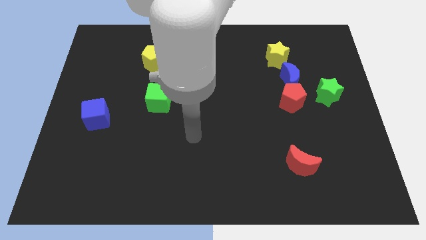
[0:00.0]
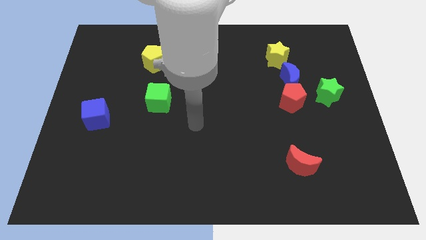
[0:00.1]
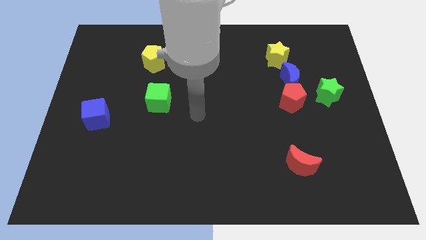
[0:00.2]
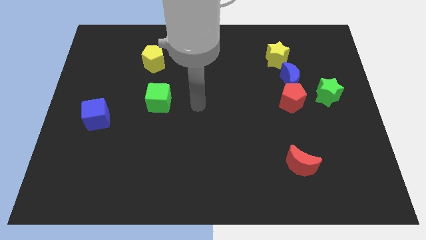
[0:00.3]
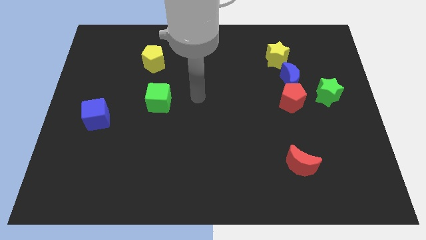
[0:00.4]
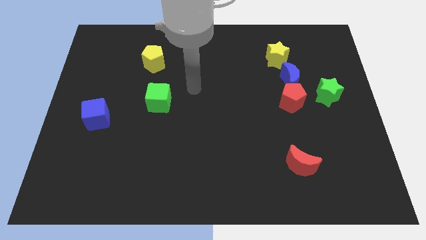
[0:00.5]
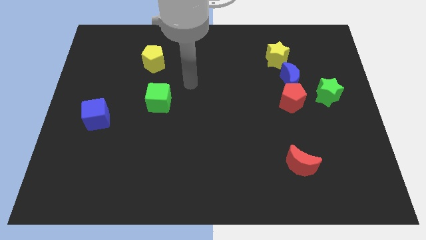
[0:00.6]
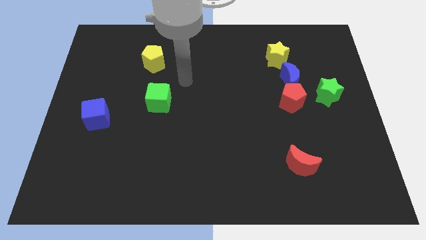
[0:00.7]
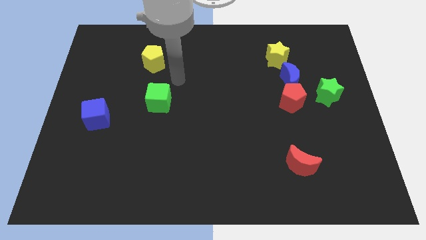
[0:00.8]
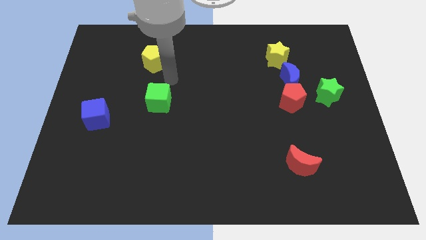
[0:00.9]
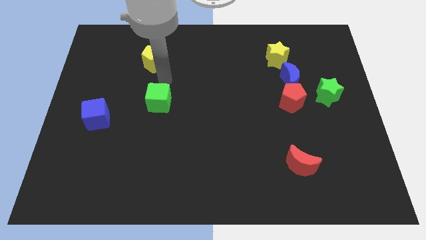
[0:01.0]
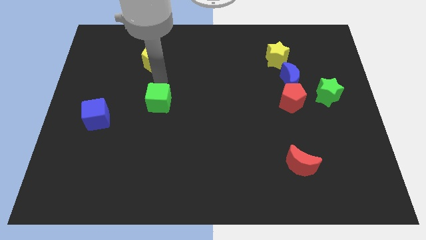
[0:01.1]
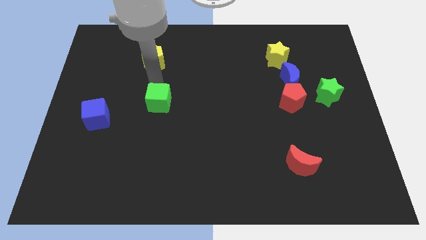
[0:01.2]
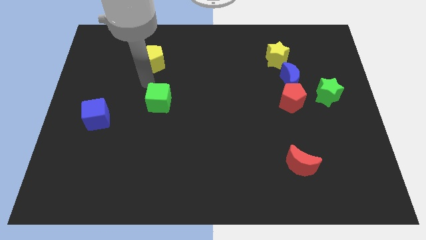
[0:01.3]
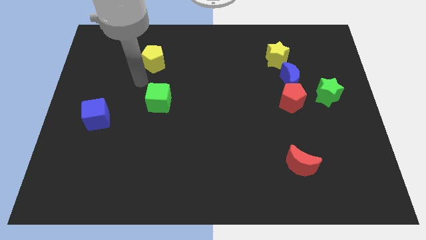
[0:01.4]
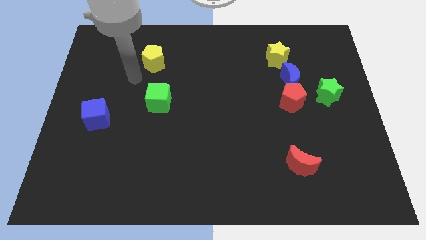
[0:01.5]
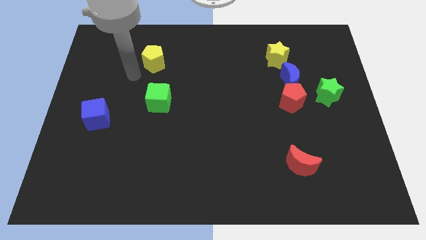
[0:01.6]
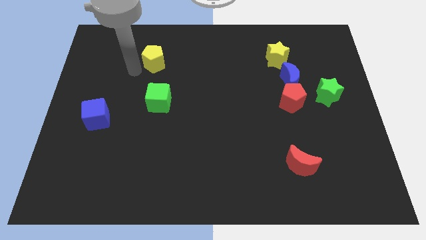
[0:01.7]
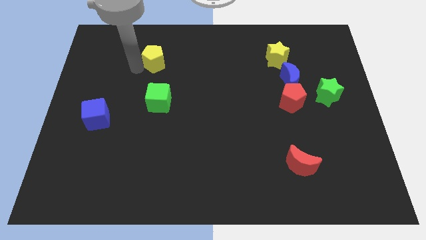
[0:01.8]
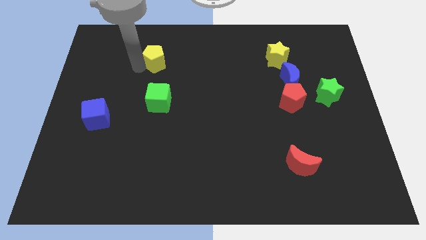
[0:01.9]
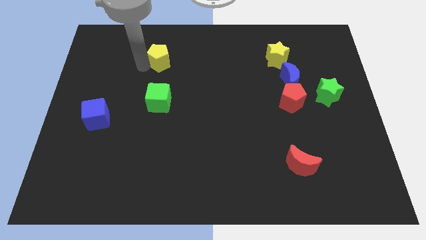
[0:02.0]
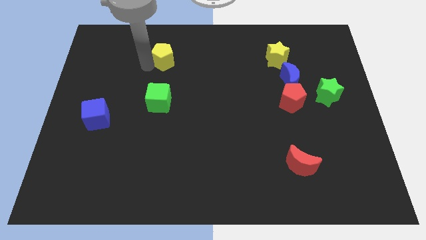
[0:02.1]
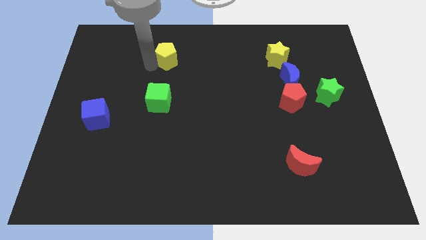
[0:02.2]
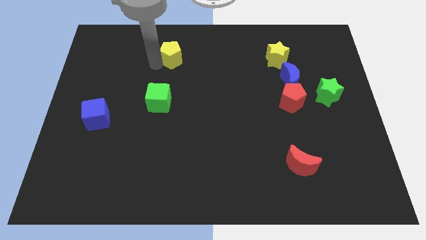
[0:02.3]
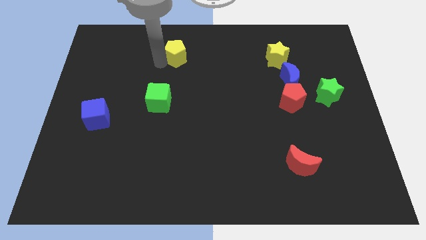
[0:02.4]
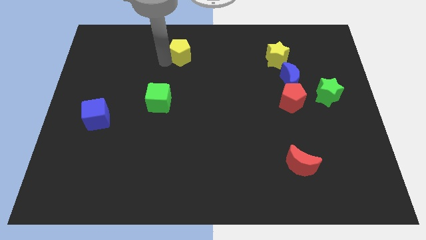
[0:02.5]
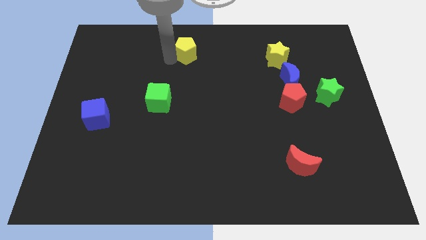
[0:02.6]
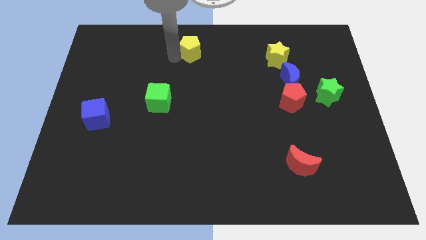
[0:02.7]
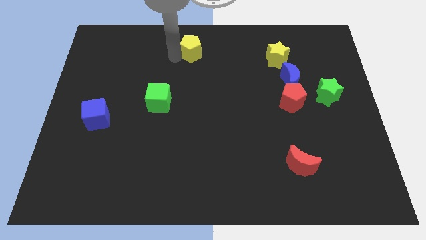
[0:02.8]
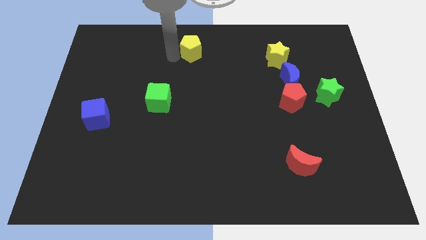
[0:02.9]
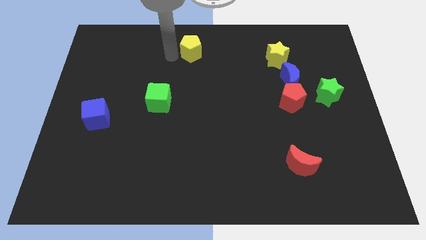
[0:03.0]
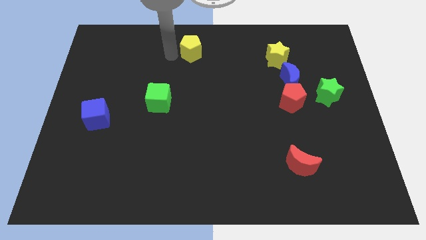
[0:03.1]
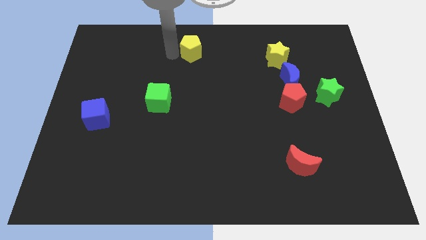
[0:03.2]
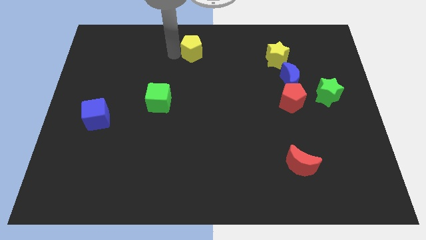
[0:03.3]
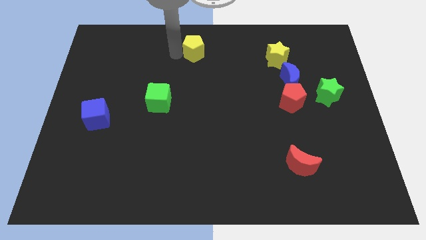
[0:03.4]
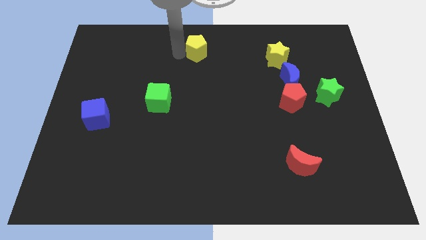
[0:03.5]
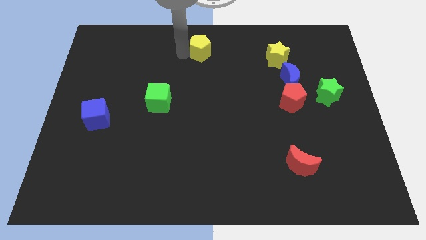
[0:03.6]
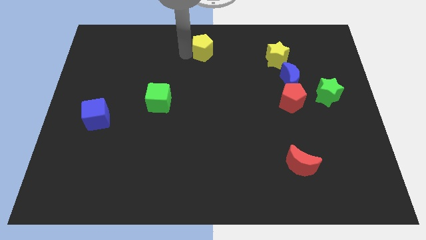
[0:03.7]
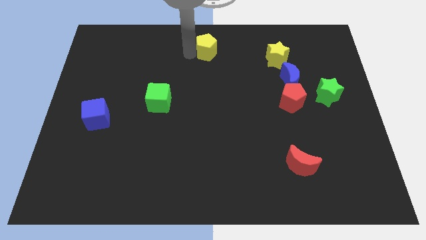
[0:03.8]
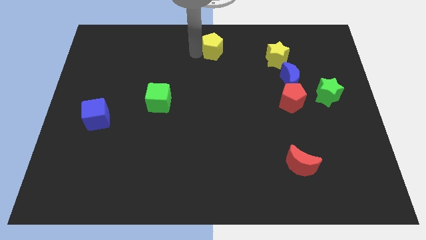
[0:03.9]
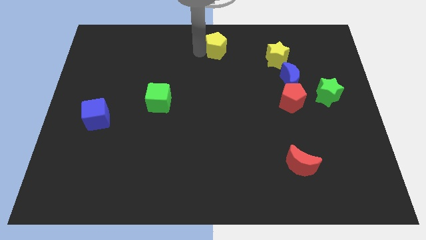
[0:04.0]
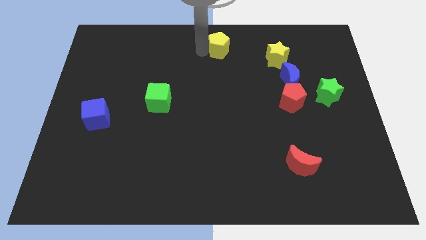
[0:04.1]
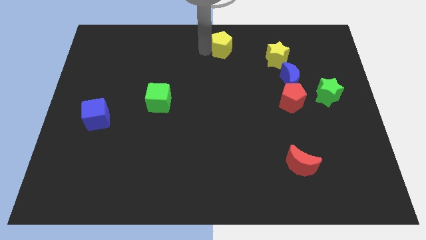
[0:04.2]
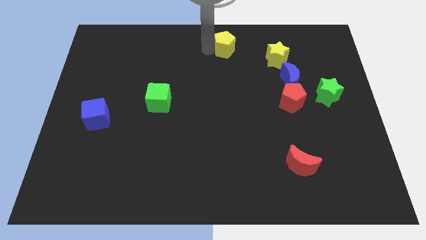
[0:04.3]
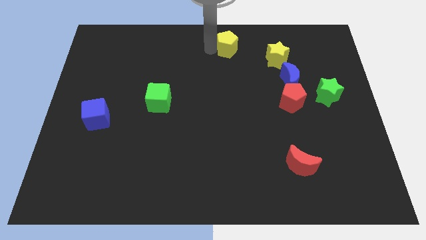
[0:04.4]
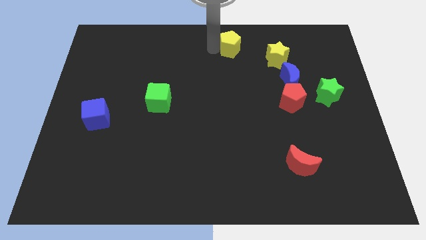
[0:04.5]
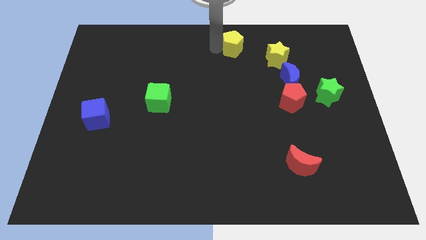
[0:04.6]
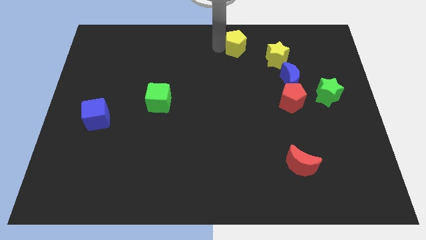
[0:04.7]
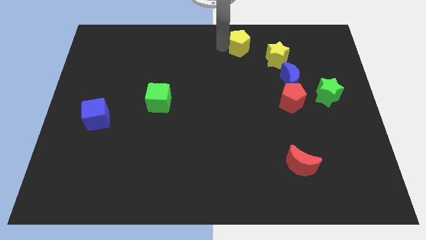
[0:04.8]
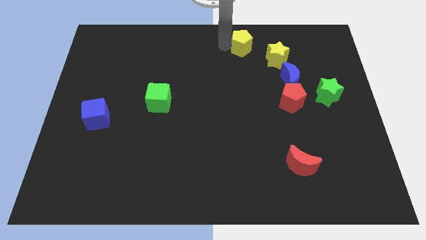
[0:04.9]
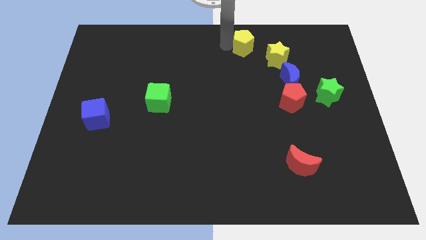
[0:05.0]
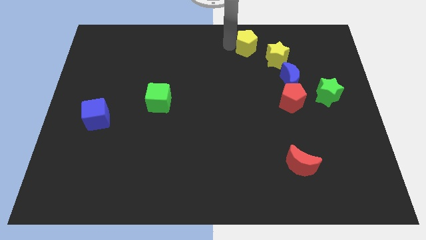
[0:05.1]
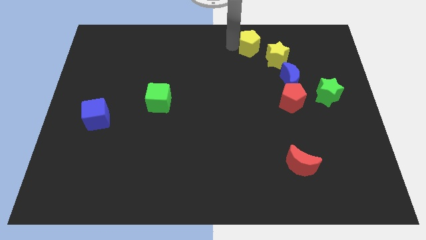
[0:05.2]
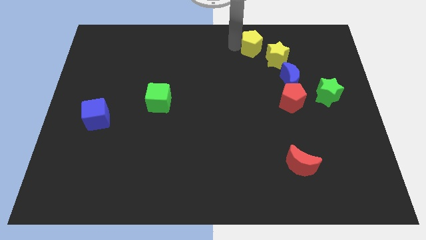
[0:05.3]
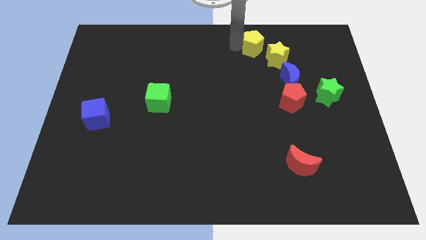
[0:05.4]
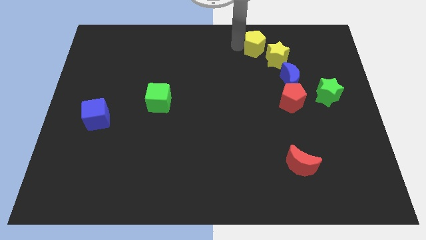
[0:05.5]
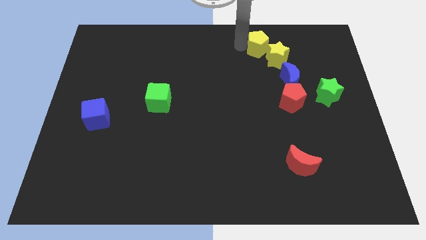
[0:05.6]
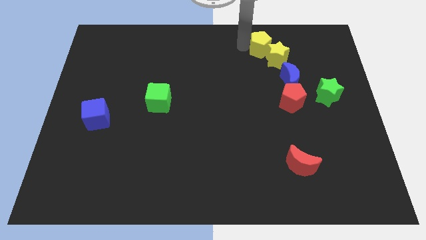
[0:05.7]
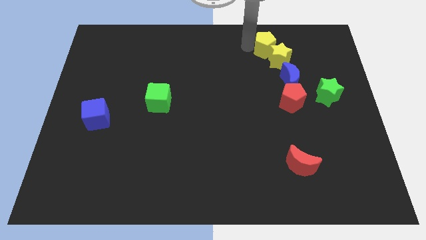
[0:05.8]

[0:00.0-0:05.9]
slide the yellow pentagon close to the yellow star

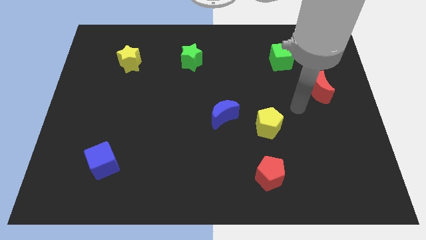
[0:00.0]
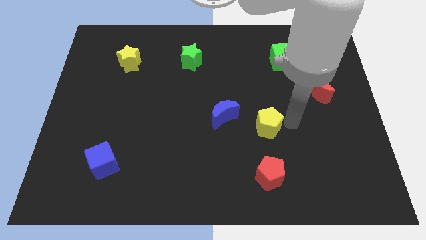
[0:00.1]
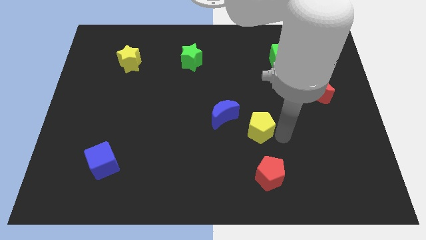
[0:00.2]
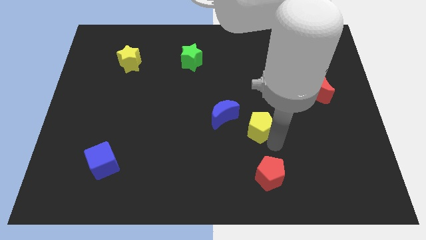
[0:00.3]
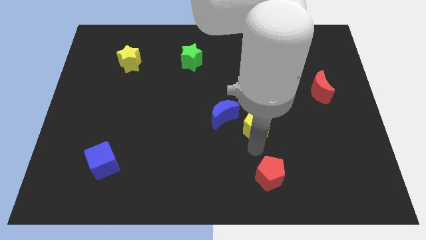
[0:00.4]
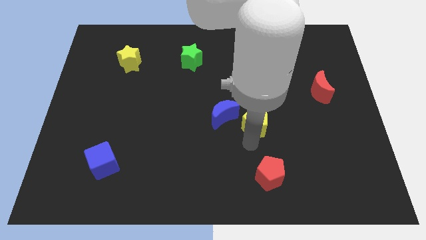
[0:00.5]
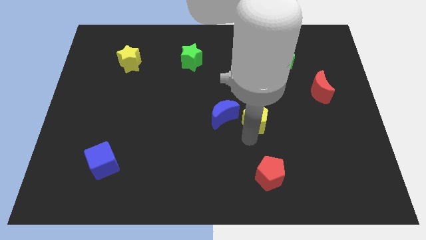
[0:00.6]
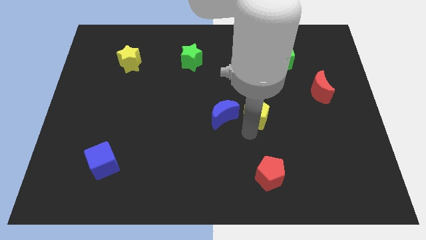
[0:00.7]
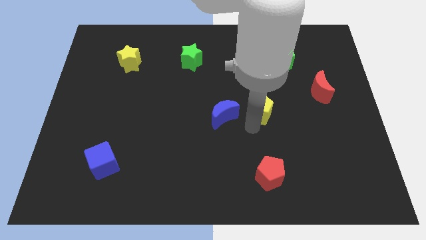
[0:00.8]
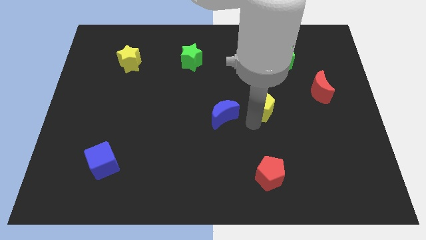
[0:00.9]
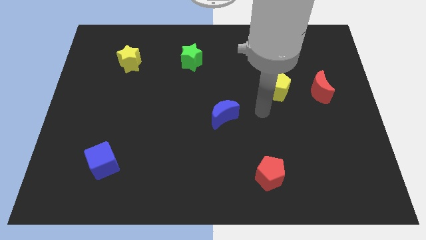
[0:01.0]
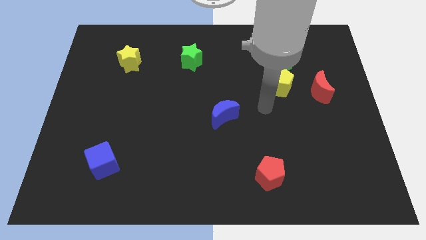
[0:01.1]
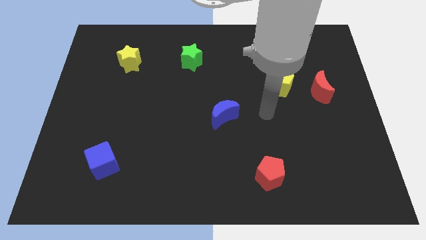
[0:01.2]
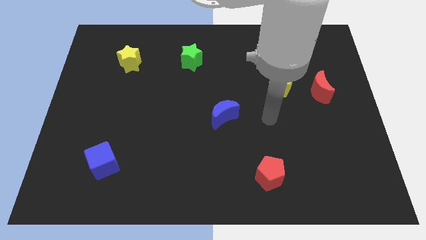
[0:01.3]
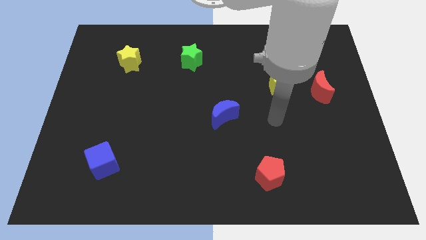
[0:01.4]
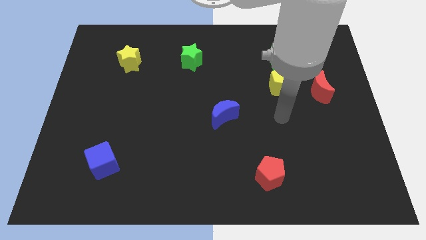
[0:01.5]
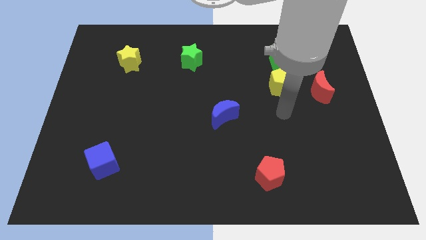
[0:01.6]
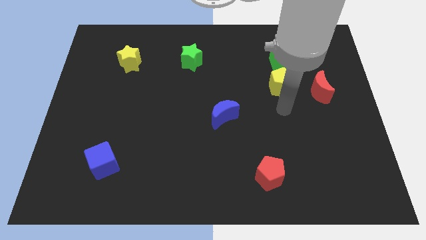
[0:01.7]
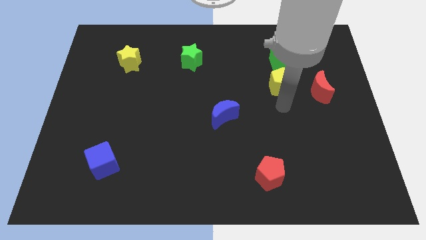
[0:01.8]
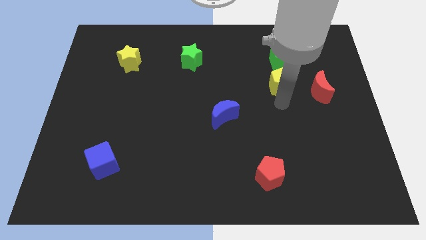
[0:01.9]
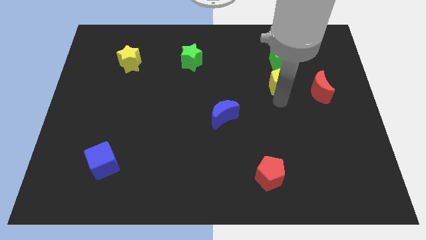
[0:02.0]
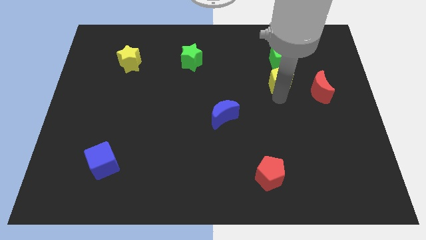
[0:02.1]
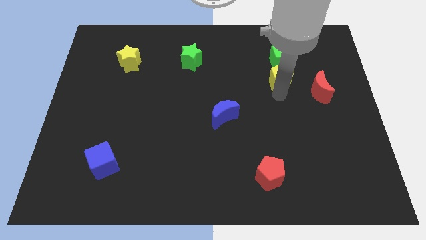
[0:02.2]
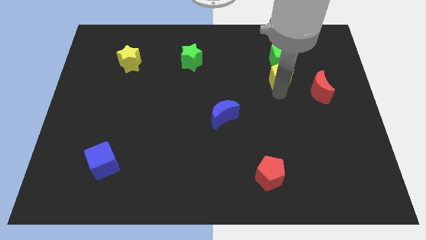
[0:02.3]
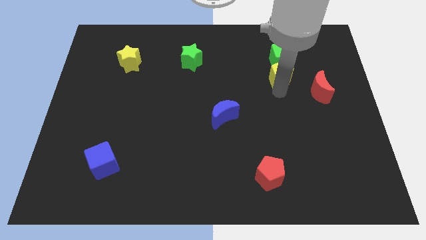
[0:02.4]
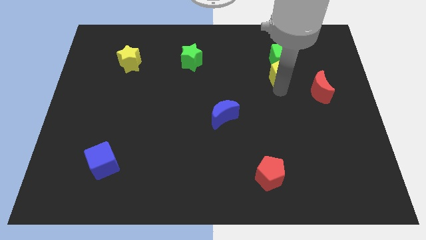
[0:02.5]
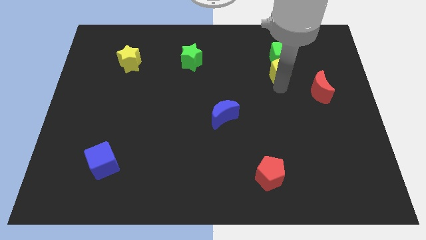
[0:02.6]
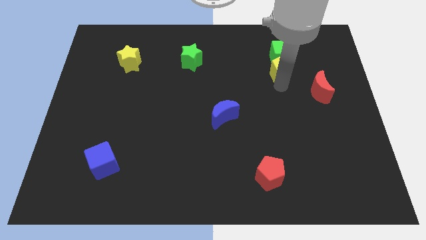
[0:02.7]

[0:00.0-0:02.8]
slide the yellow pentagon towards the green cube

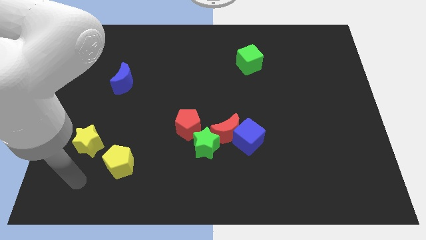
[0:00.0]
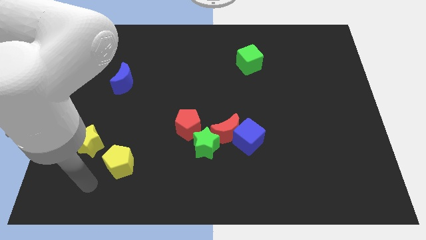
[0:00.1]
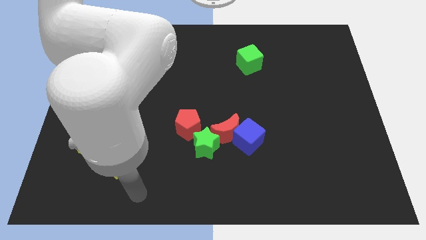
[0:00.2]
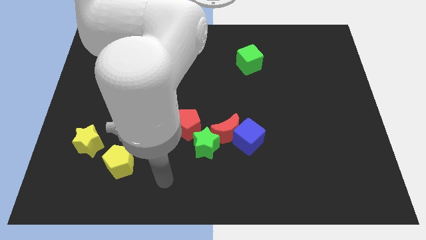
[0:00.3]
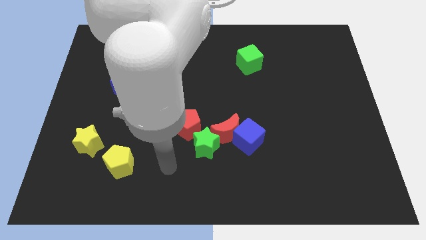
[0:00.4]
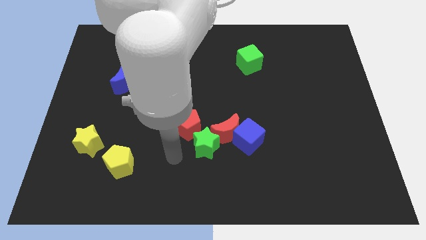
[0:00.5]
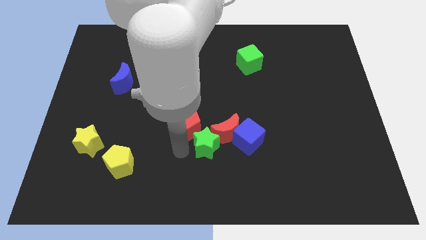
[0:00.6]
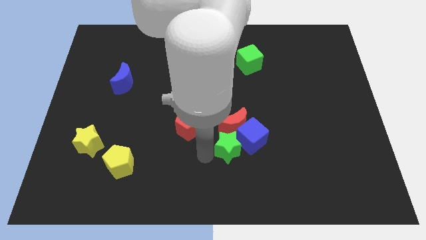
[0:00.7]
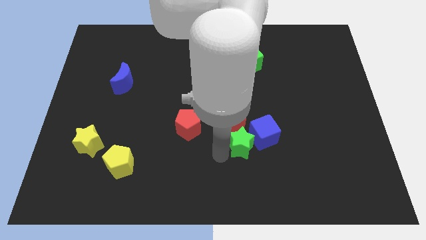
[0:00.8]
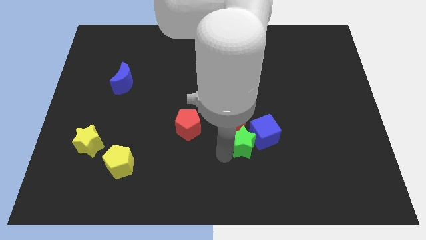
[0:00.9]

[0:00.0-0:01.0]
push the green star to the blue cube
